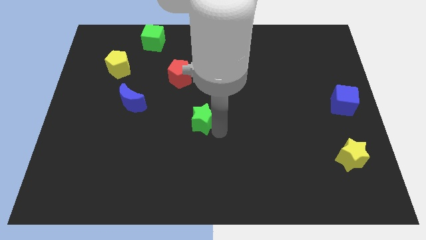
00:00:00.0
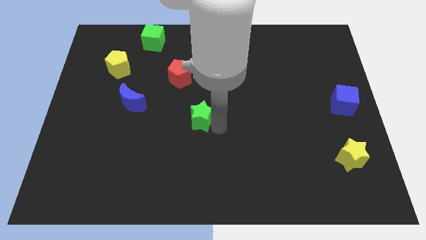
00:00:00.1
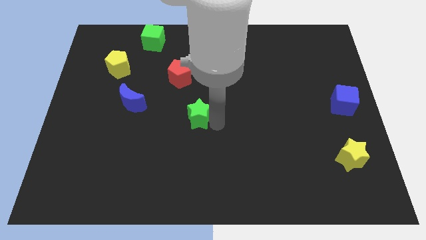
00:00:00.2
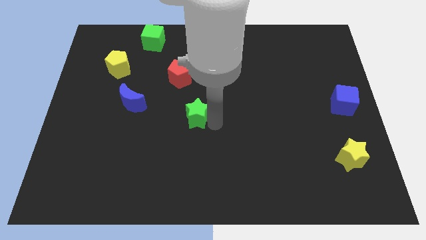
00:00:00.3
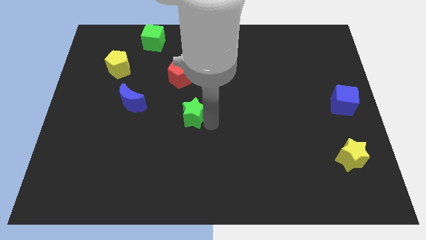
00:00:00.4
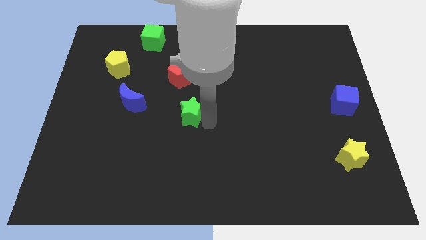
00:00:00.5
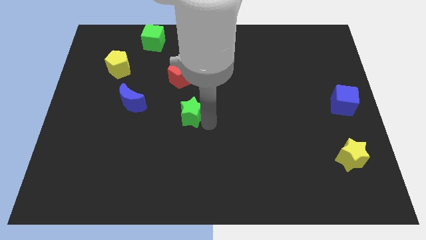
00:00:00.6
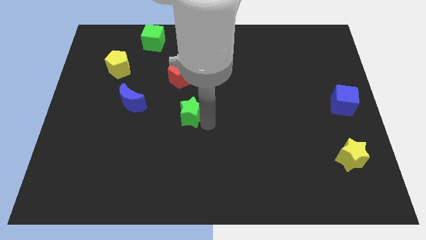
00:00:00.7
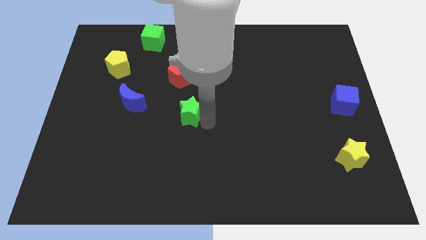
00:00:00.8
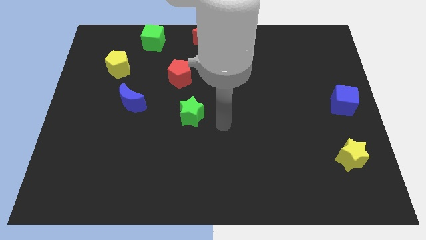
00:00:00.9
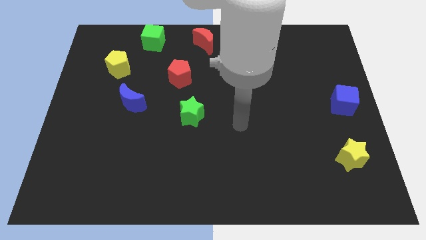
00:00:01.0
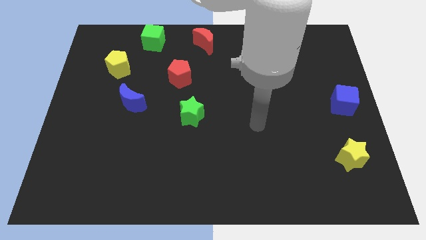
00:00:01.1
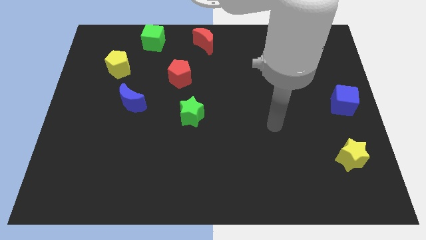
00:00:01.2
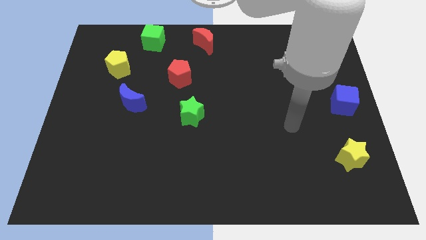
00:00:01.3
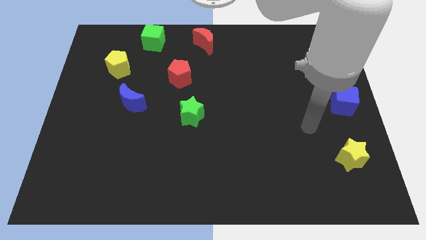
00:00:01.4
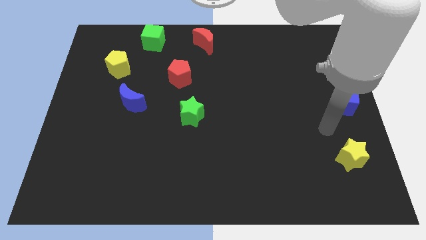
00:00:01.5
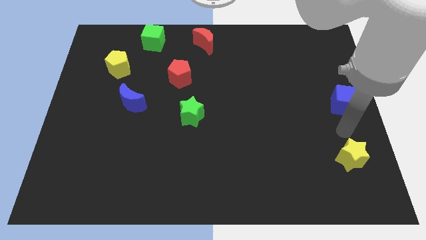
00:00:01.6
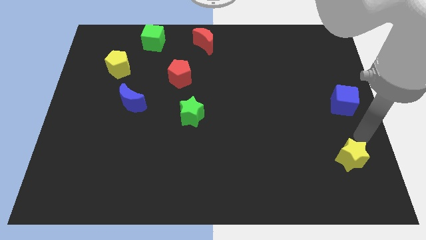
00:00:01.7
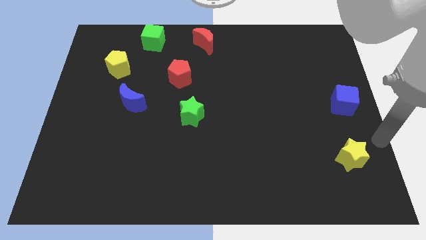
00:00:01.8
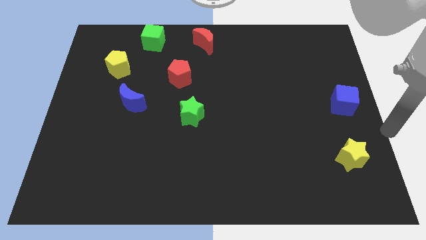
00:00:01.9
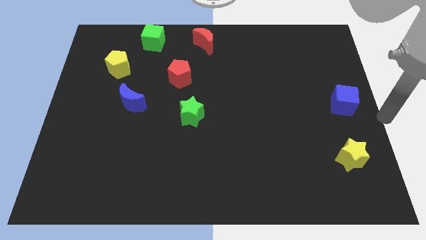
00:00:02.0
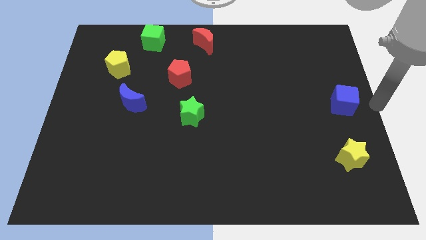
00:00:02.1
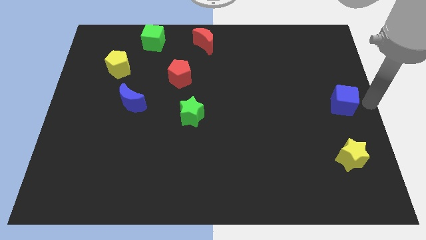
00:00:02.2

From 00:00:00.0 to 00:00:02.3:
go and move your hand at the right of the blue cube

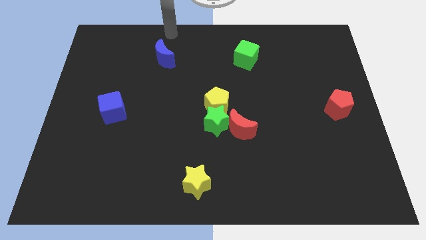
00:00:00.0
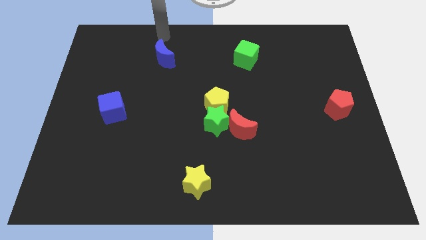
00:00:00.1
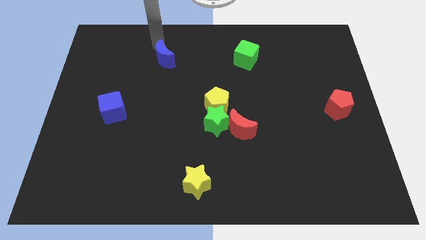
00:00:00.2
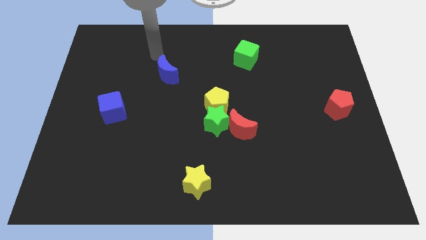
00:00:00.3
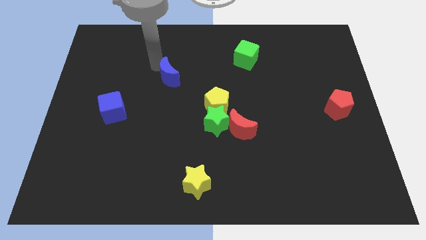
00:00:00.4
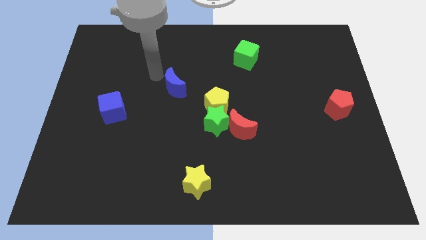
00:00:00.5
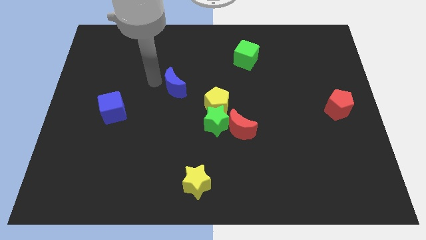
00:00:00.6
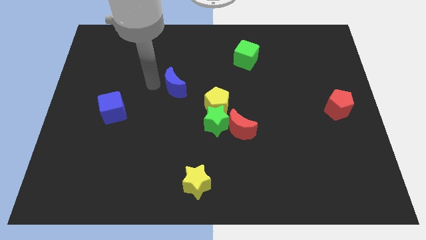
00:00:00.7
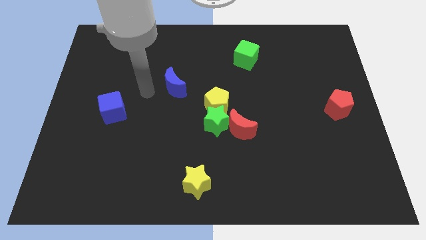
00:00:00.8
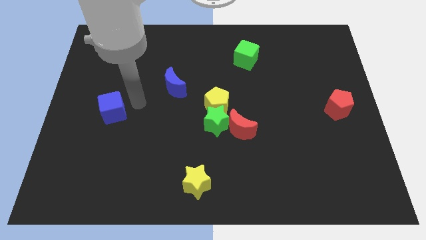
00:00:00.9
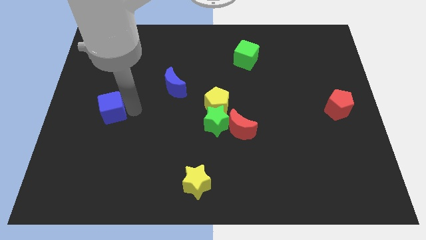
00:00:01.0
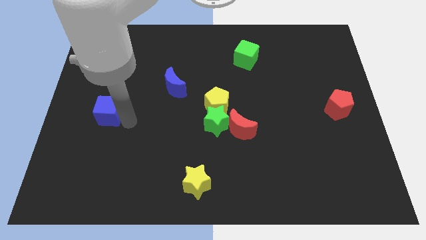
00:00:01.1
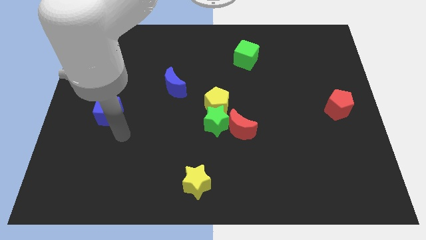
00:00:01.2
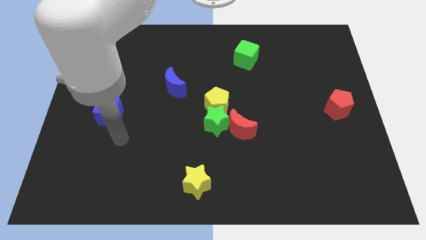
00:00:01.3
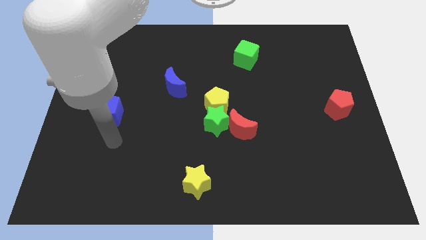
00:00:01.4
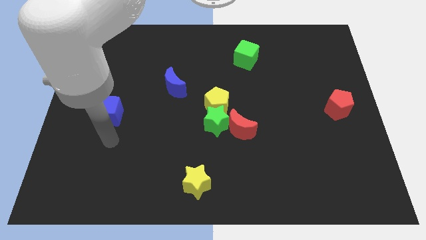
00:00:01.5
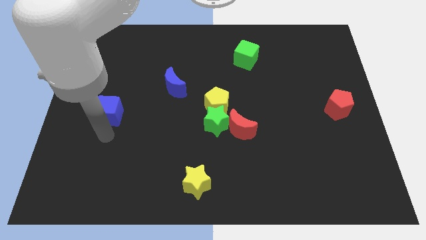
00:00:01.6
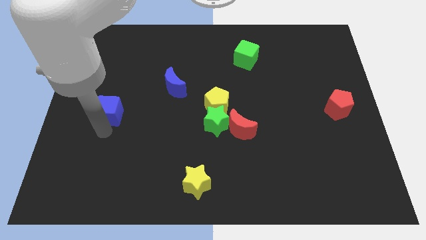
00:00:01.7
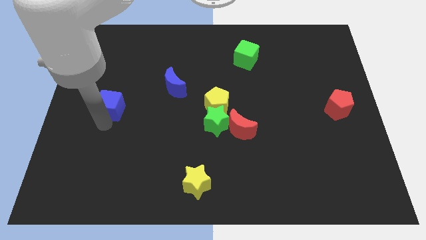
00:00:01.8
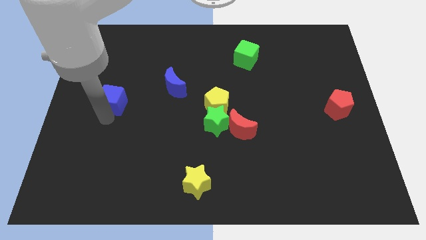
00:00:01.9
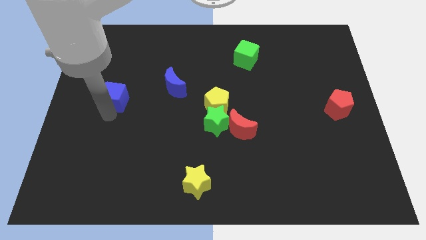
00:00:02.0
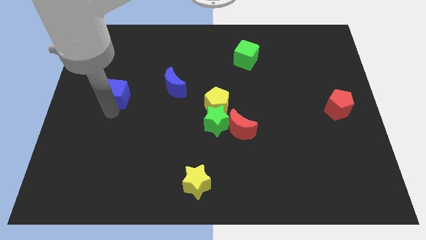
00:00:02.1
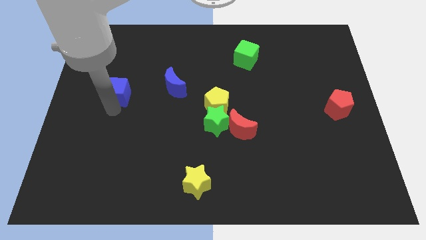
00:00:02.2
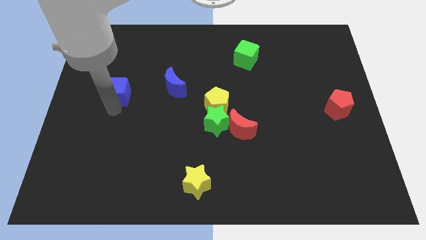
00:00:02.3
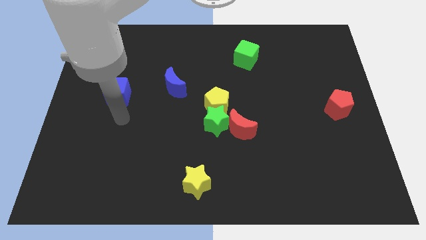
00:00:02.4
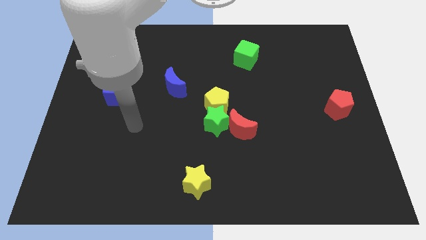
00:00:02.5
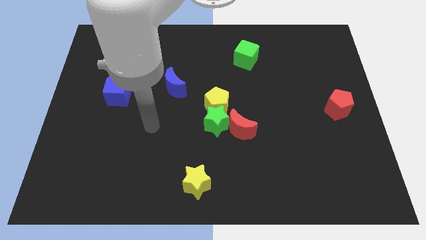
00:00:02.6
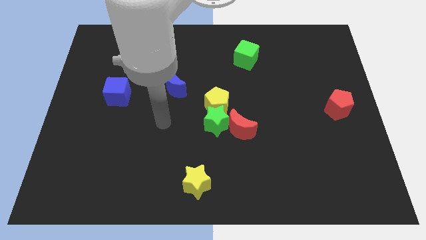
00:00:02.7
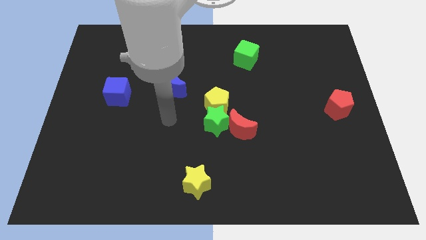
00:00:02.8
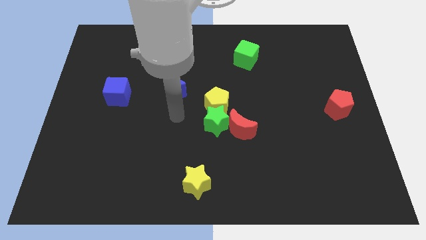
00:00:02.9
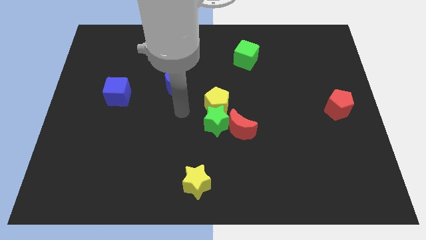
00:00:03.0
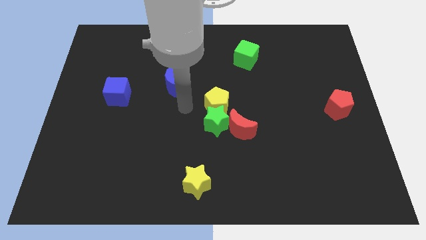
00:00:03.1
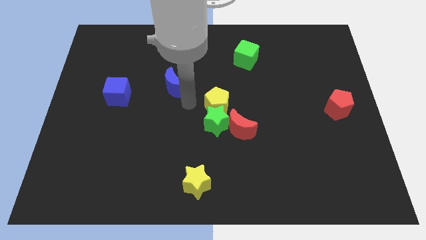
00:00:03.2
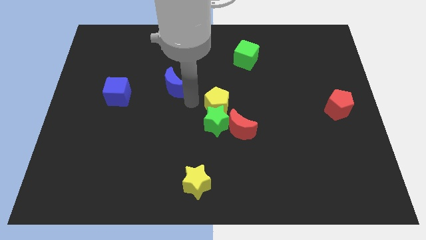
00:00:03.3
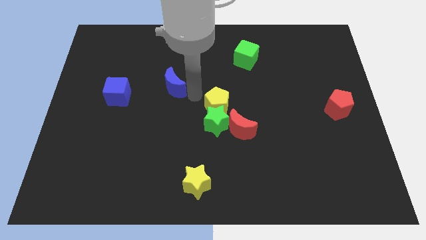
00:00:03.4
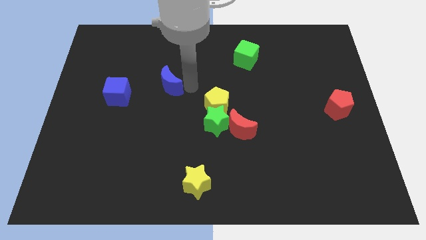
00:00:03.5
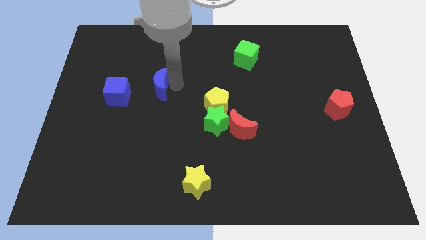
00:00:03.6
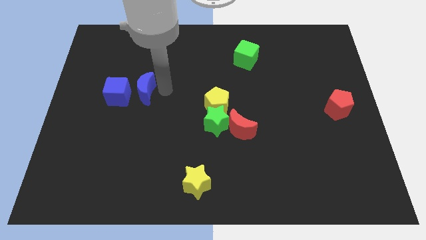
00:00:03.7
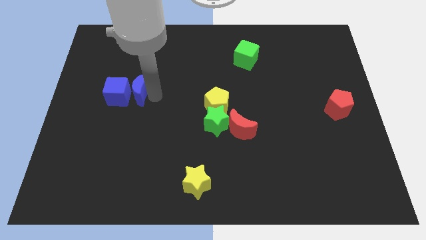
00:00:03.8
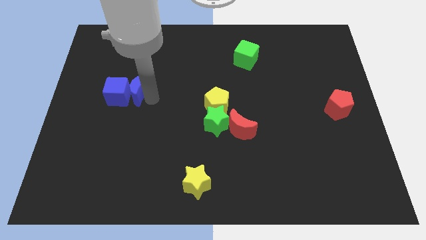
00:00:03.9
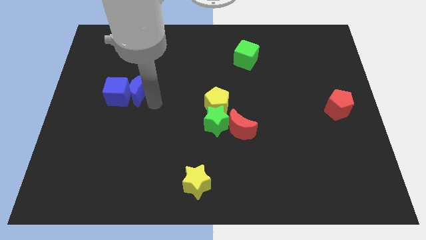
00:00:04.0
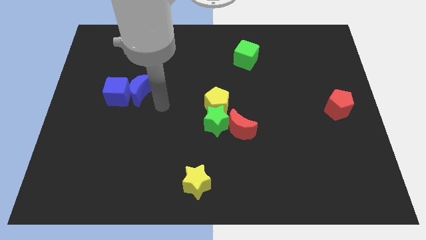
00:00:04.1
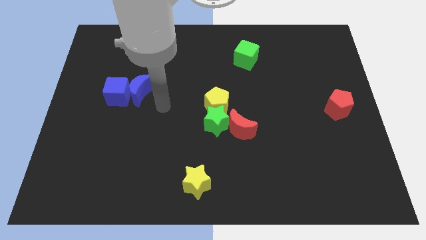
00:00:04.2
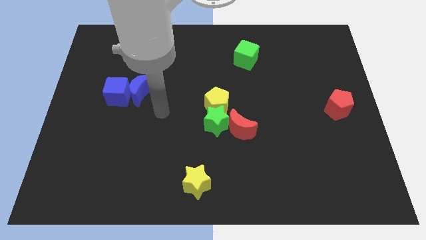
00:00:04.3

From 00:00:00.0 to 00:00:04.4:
move the blue moon into the blue cube

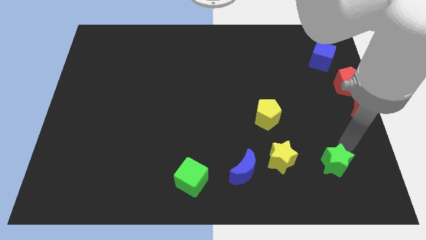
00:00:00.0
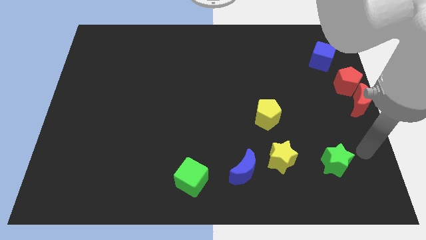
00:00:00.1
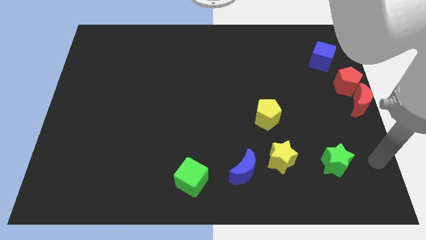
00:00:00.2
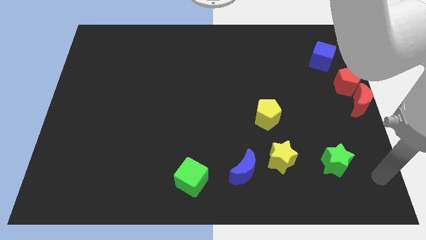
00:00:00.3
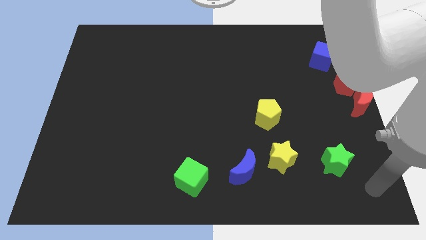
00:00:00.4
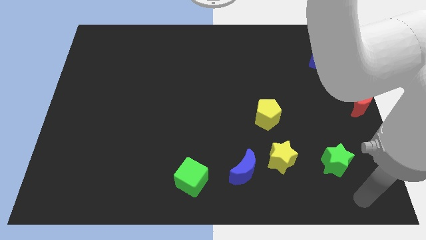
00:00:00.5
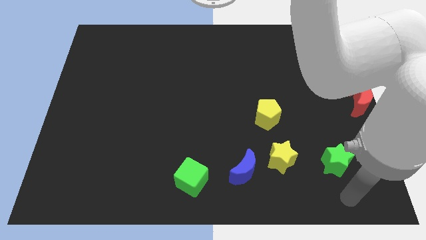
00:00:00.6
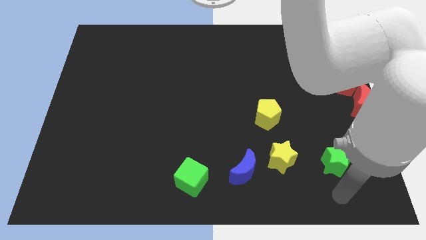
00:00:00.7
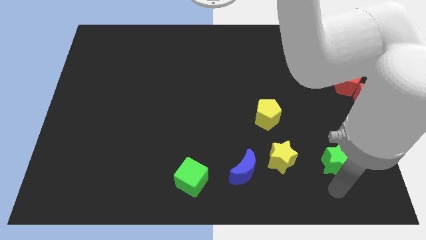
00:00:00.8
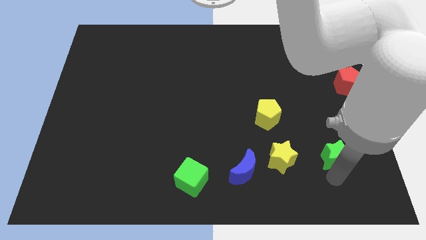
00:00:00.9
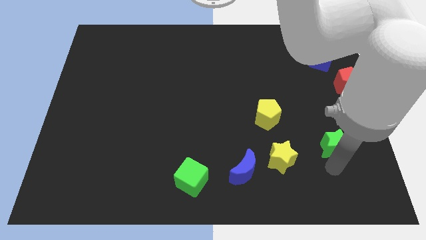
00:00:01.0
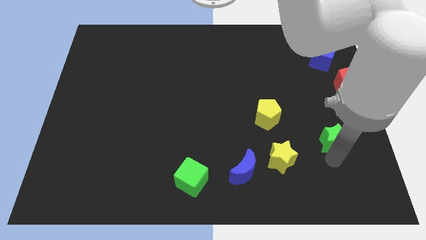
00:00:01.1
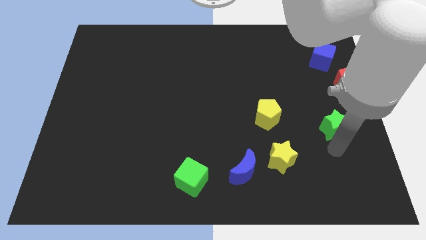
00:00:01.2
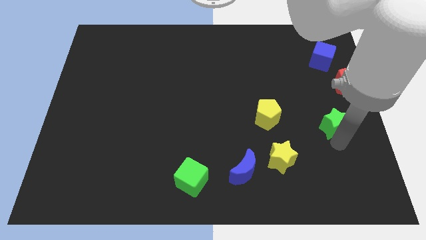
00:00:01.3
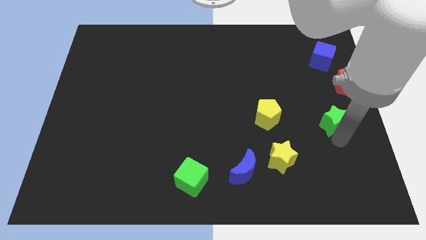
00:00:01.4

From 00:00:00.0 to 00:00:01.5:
move the green star slightly up

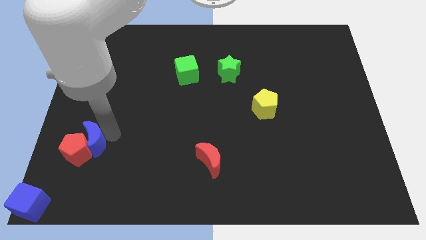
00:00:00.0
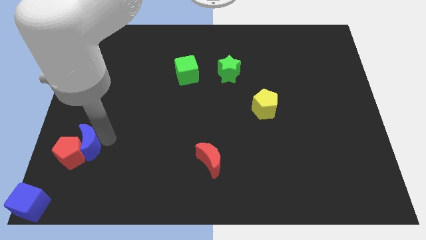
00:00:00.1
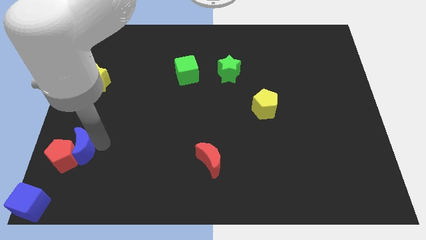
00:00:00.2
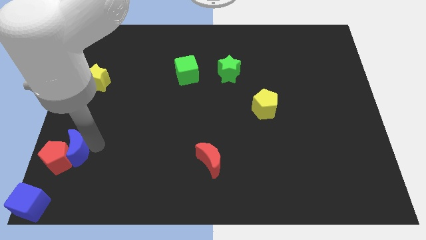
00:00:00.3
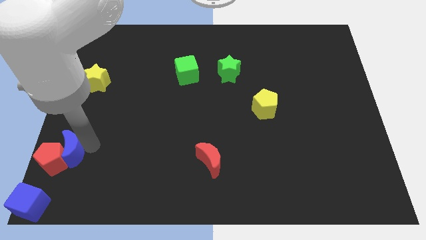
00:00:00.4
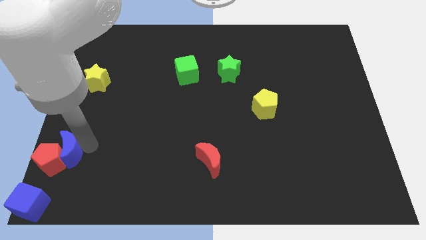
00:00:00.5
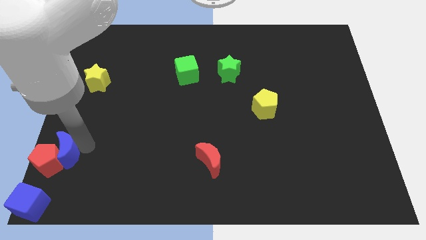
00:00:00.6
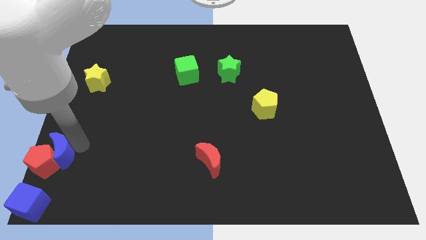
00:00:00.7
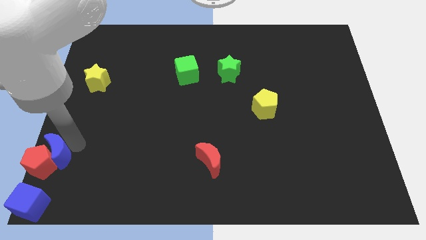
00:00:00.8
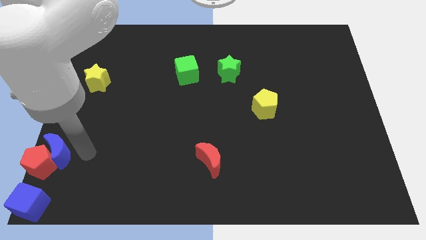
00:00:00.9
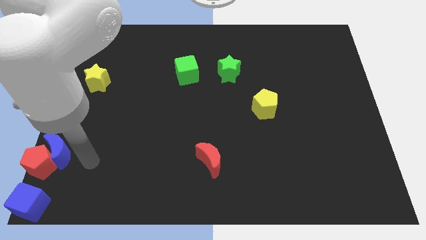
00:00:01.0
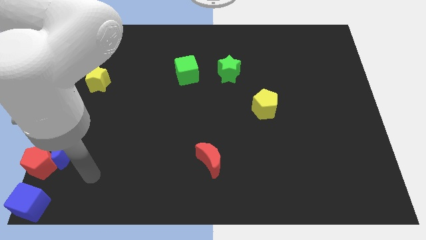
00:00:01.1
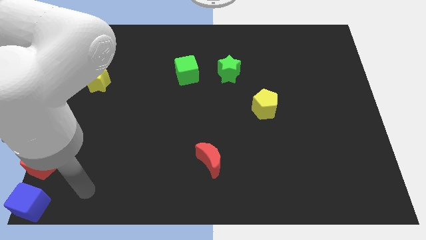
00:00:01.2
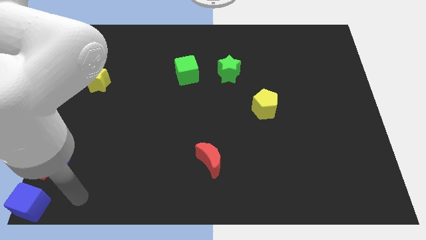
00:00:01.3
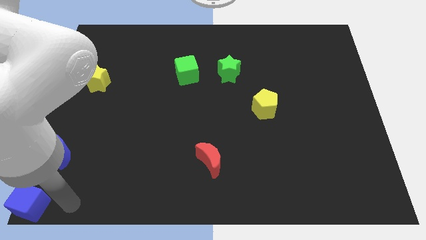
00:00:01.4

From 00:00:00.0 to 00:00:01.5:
push red pentagon with blue crescent towards the top of the blue cube
